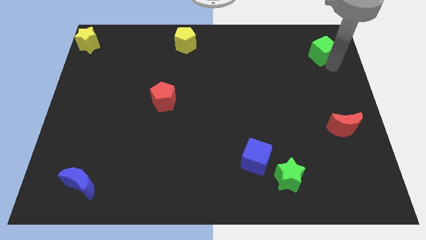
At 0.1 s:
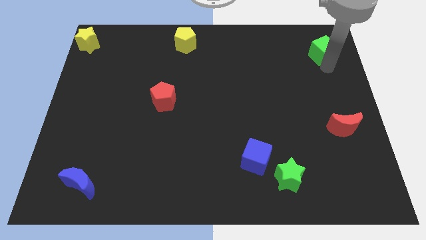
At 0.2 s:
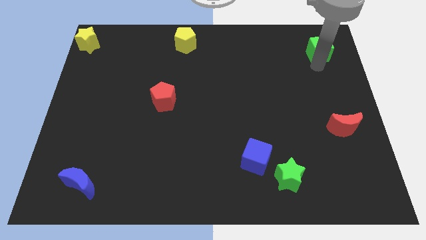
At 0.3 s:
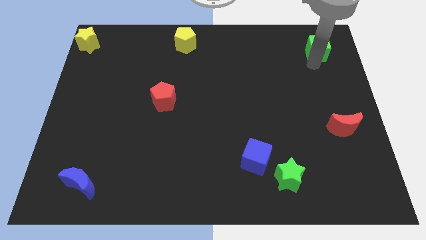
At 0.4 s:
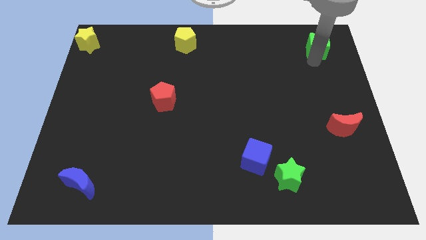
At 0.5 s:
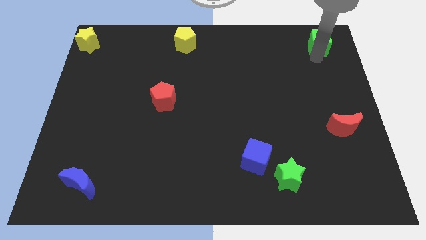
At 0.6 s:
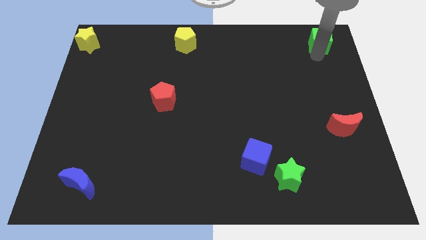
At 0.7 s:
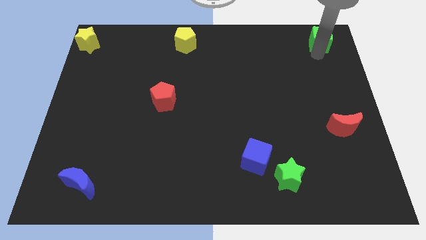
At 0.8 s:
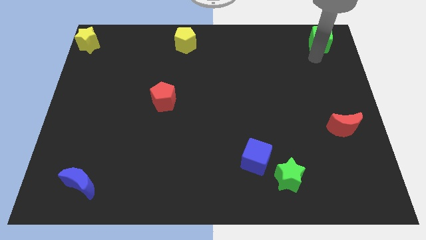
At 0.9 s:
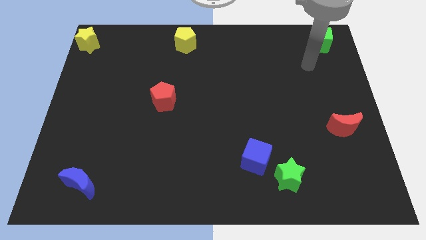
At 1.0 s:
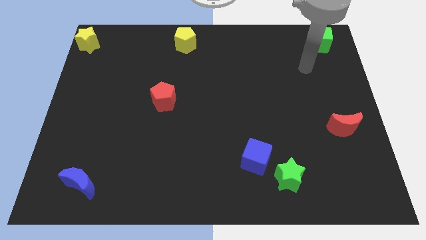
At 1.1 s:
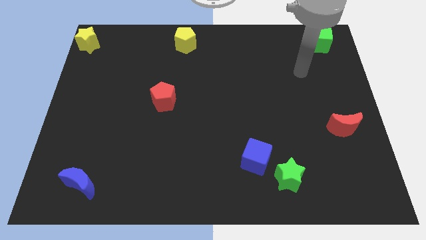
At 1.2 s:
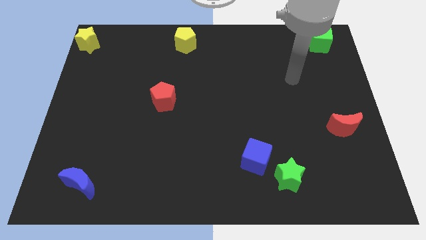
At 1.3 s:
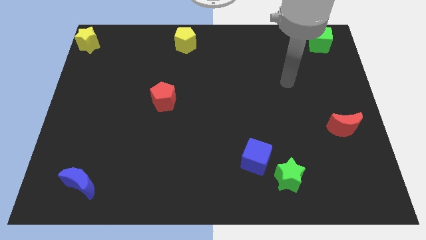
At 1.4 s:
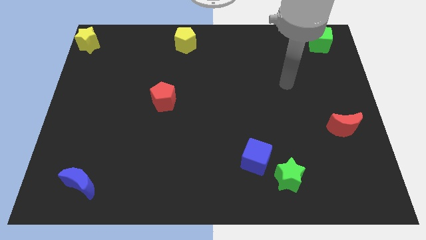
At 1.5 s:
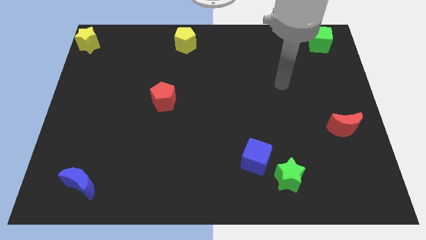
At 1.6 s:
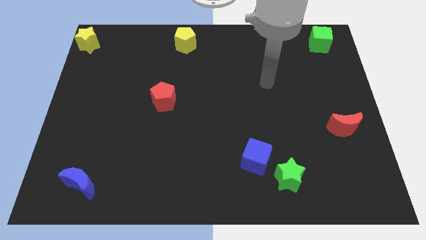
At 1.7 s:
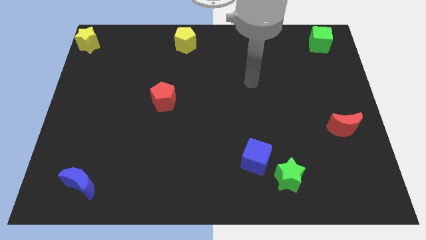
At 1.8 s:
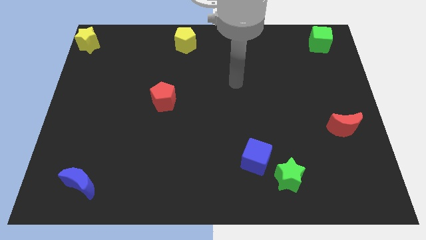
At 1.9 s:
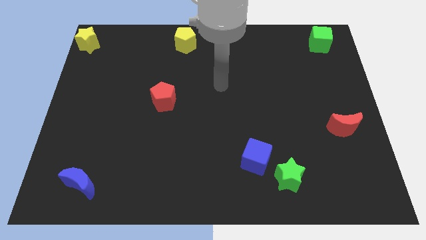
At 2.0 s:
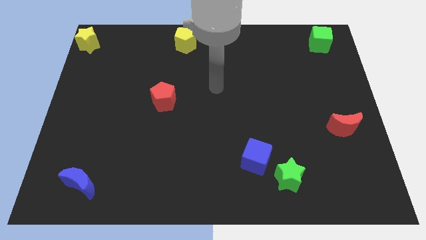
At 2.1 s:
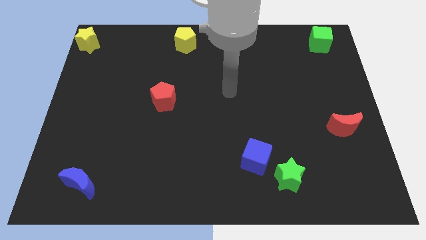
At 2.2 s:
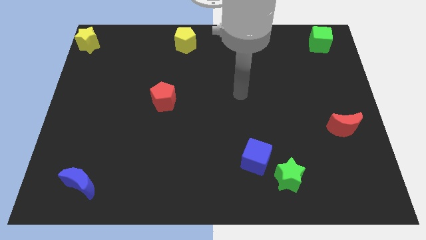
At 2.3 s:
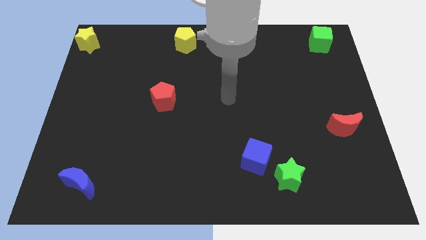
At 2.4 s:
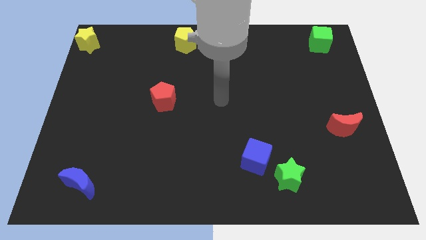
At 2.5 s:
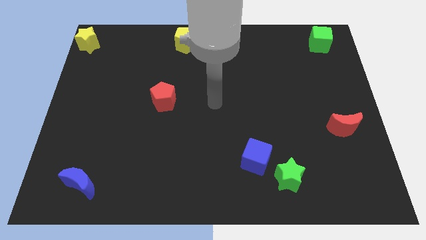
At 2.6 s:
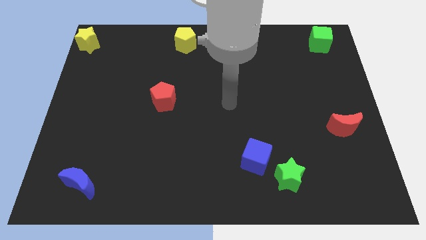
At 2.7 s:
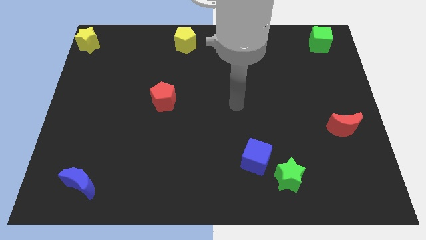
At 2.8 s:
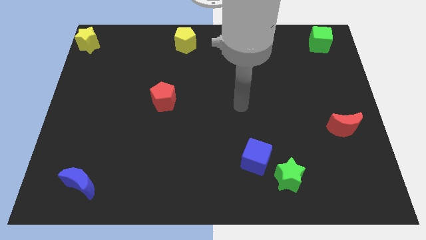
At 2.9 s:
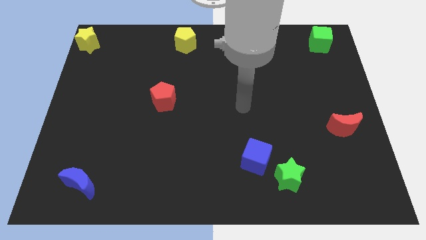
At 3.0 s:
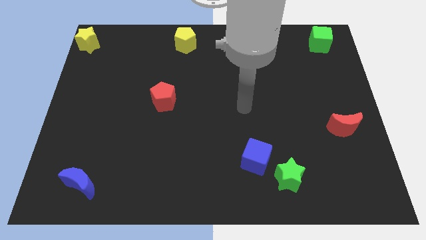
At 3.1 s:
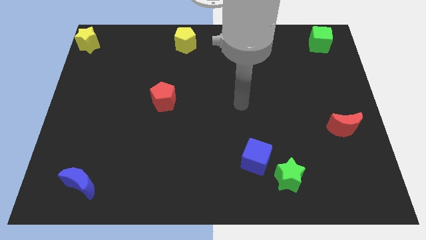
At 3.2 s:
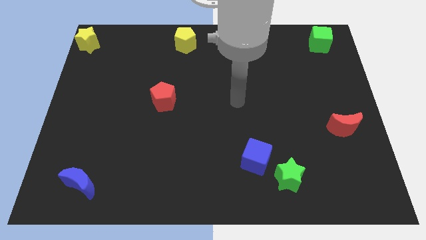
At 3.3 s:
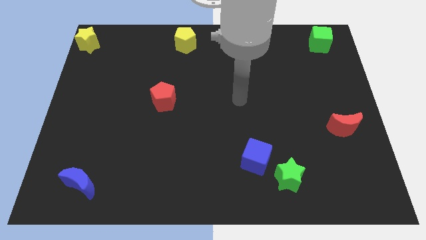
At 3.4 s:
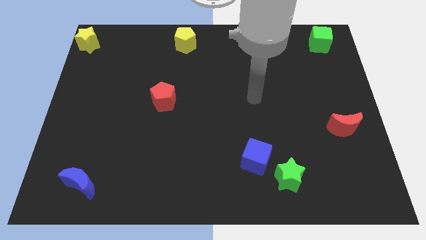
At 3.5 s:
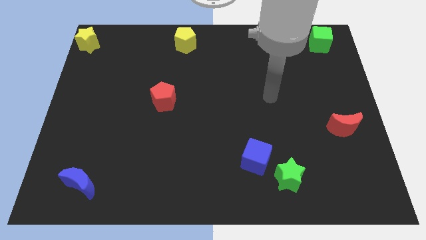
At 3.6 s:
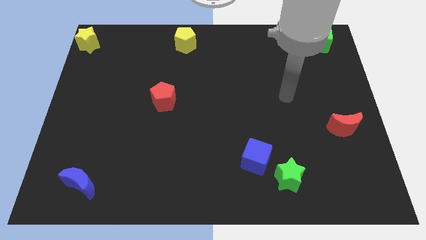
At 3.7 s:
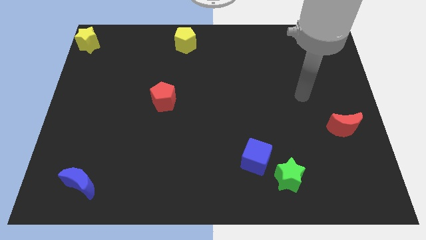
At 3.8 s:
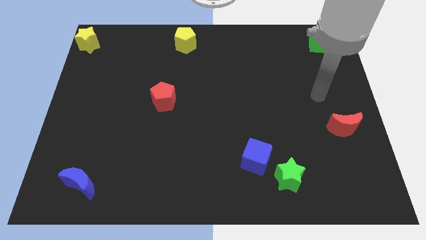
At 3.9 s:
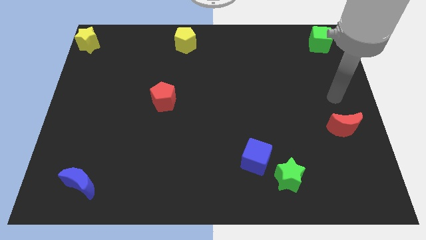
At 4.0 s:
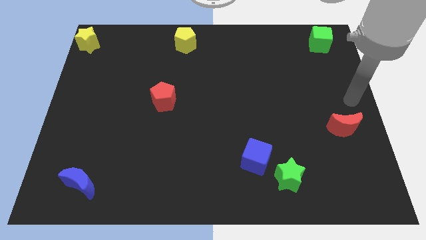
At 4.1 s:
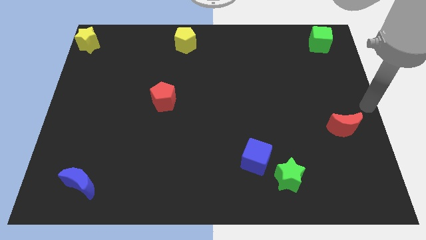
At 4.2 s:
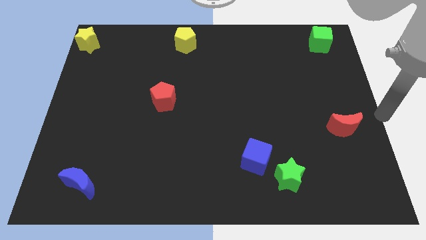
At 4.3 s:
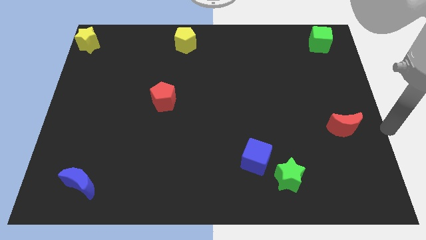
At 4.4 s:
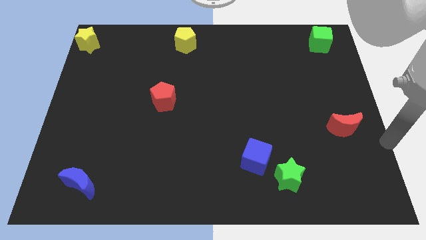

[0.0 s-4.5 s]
move your arm to the right of the red moon

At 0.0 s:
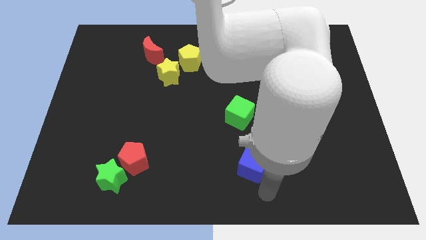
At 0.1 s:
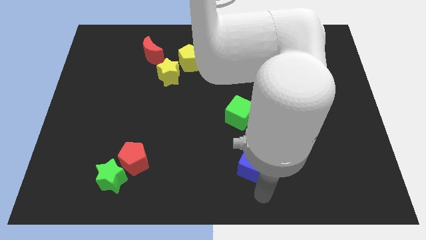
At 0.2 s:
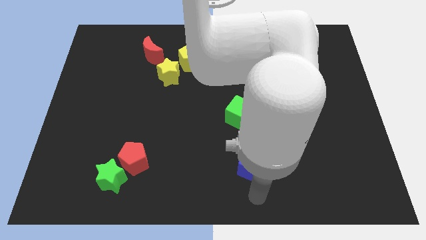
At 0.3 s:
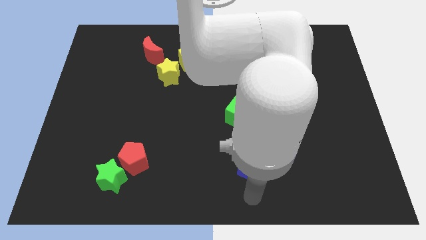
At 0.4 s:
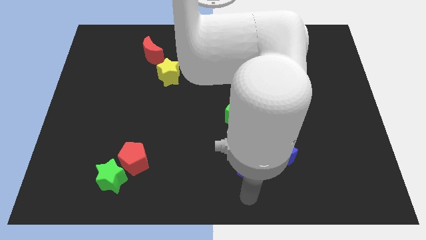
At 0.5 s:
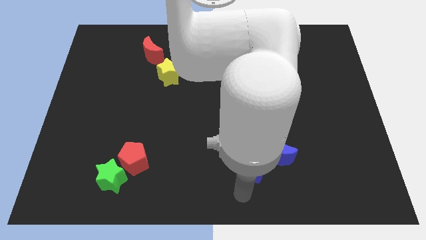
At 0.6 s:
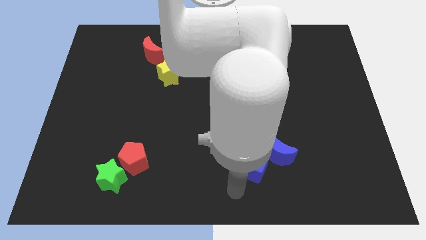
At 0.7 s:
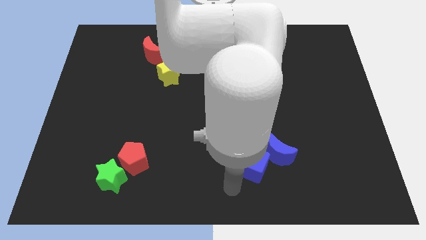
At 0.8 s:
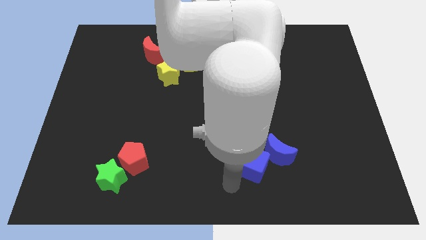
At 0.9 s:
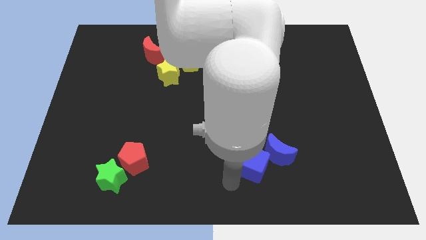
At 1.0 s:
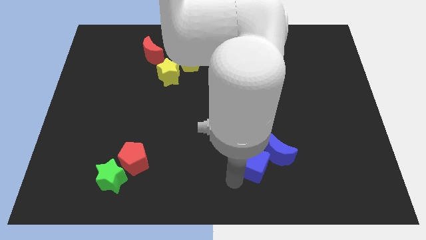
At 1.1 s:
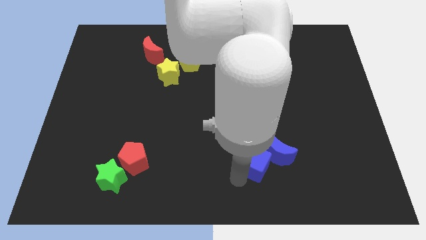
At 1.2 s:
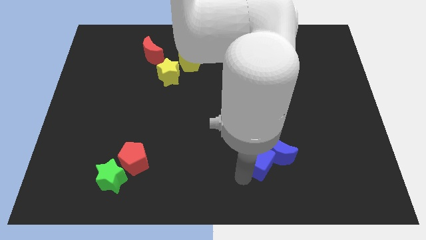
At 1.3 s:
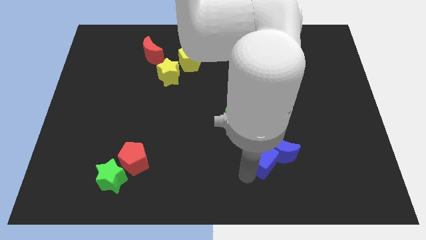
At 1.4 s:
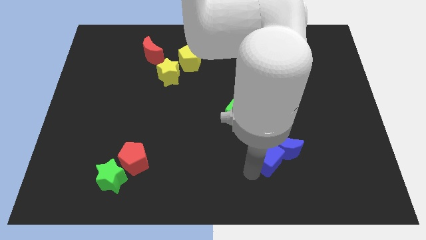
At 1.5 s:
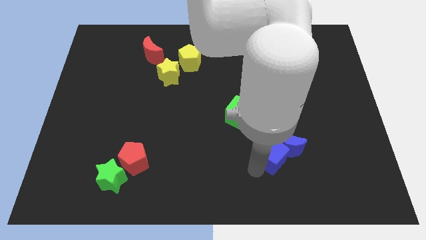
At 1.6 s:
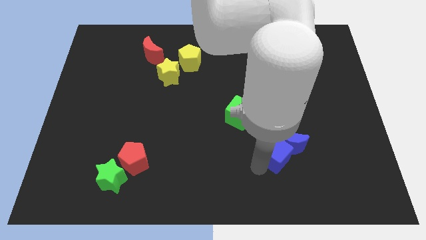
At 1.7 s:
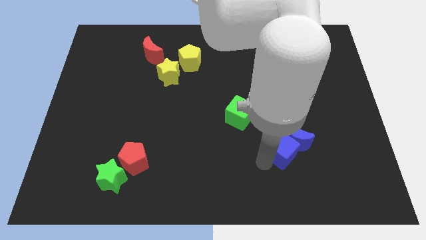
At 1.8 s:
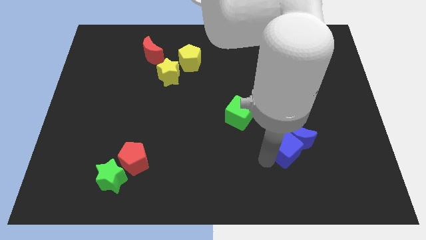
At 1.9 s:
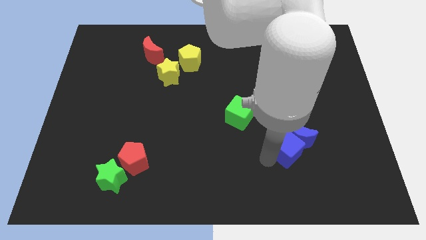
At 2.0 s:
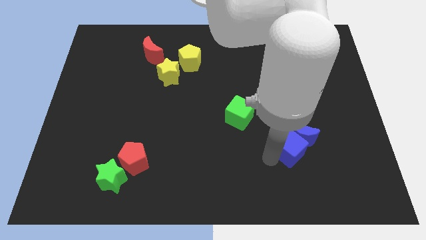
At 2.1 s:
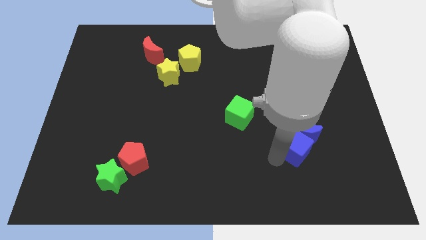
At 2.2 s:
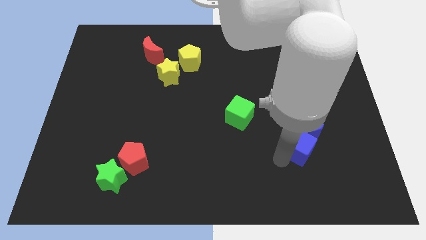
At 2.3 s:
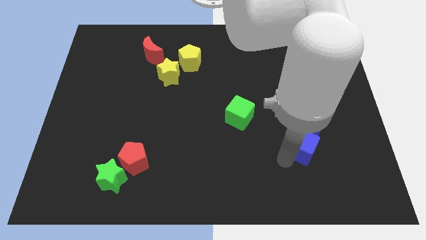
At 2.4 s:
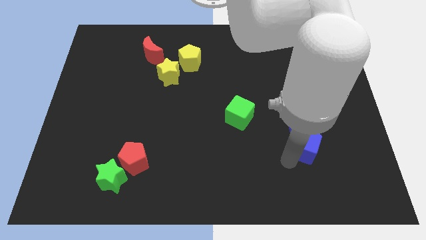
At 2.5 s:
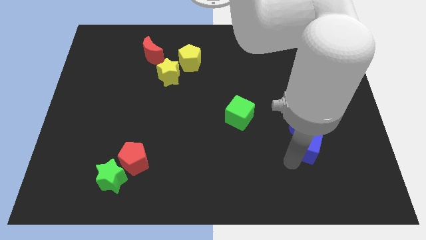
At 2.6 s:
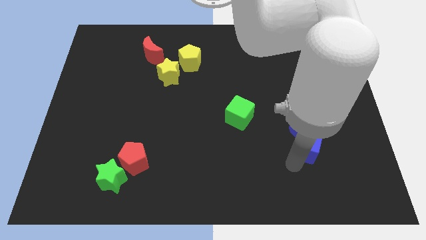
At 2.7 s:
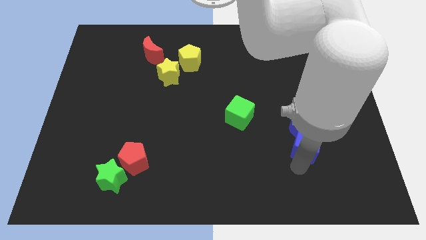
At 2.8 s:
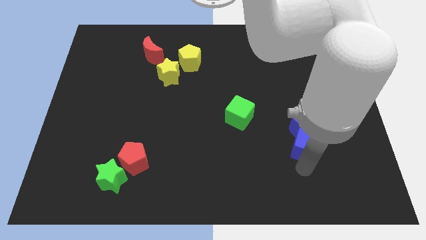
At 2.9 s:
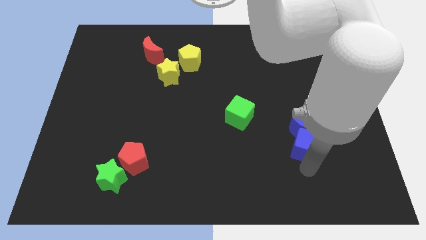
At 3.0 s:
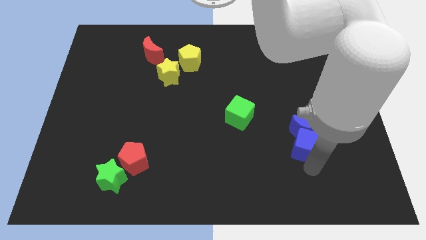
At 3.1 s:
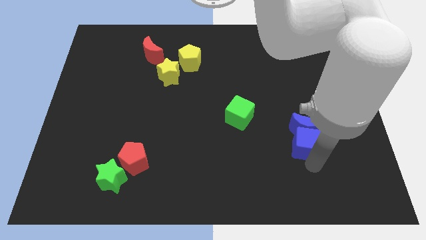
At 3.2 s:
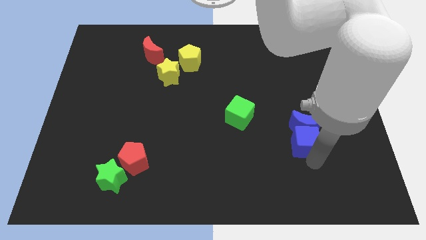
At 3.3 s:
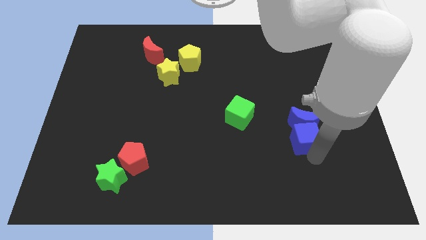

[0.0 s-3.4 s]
place the blue blocks to the right of the green cube

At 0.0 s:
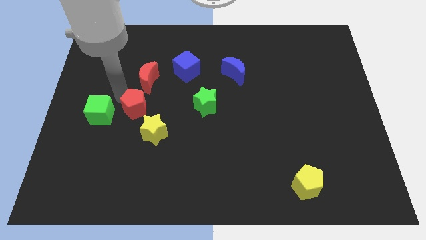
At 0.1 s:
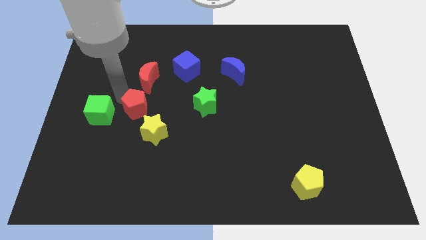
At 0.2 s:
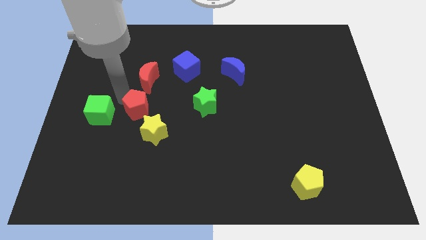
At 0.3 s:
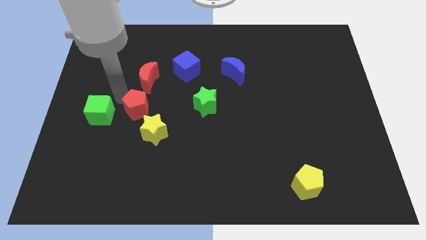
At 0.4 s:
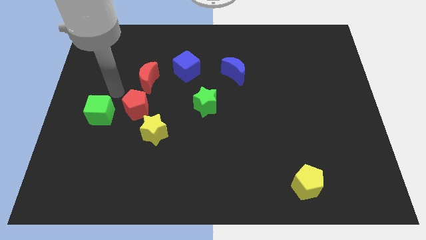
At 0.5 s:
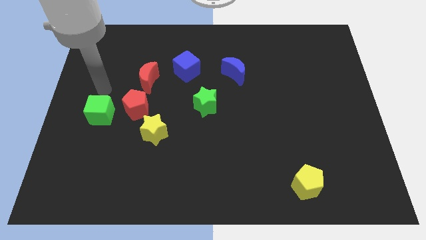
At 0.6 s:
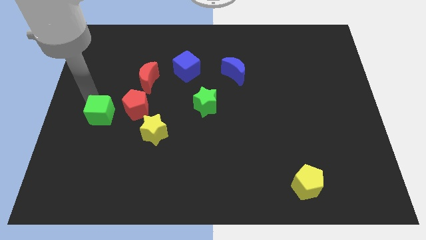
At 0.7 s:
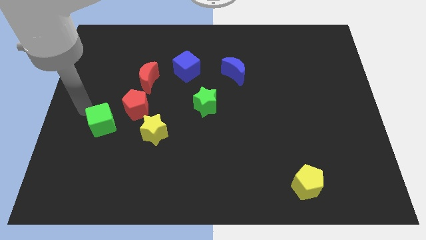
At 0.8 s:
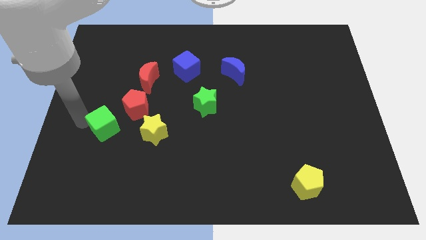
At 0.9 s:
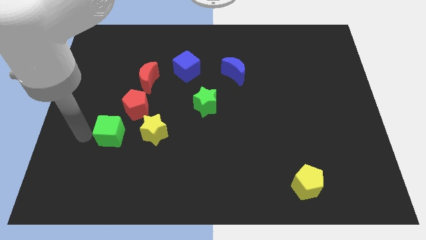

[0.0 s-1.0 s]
place the red pentagan to the bottom left of red crescent
